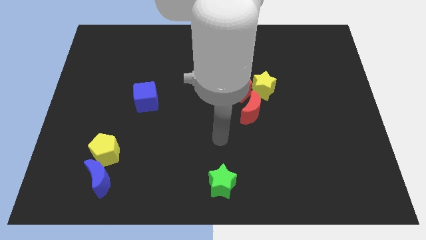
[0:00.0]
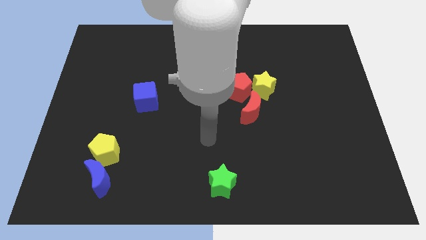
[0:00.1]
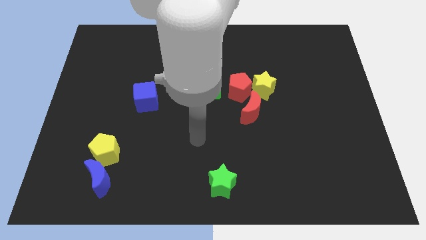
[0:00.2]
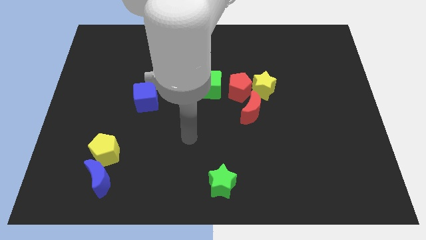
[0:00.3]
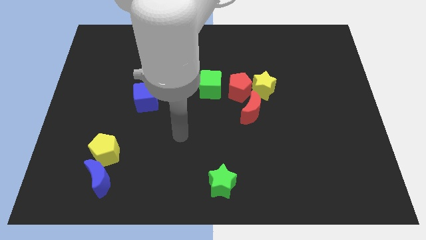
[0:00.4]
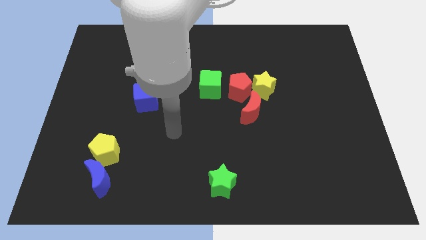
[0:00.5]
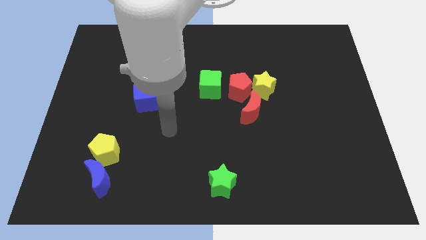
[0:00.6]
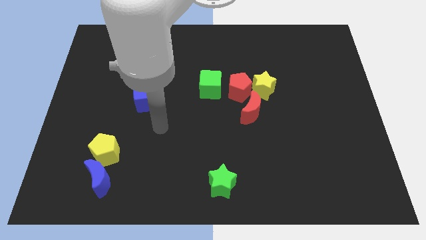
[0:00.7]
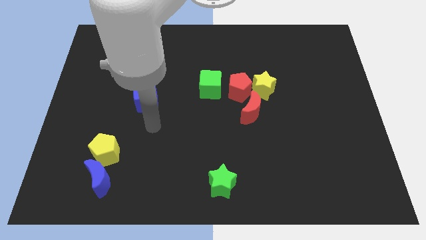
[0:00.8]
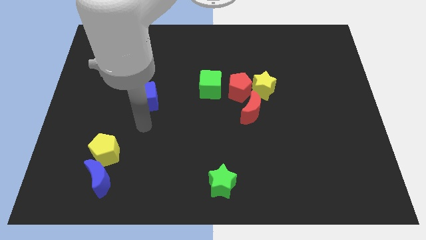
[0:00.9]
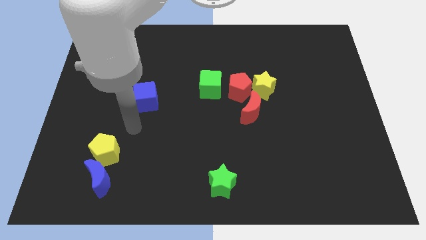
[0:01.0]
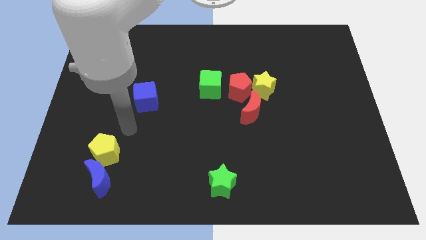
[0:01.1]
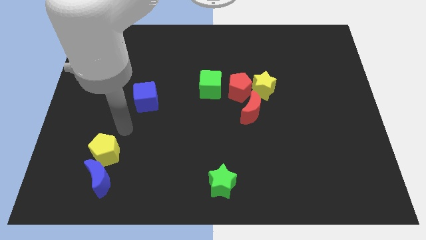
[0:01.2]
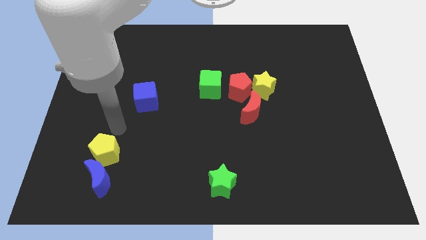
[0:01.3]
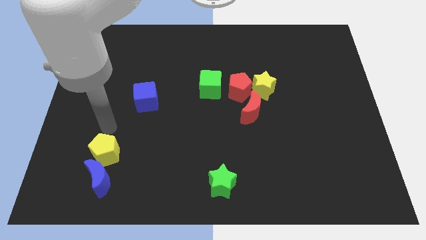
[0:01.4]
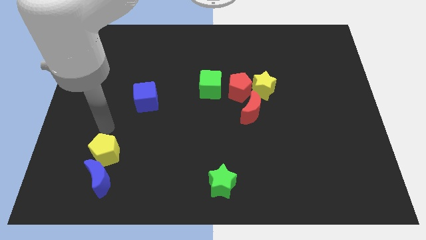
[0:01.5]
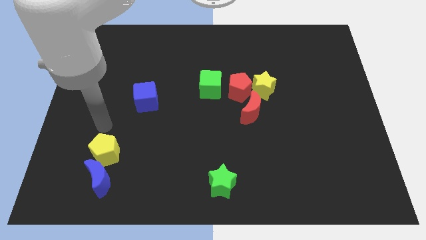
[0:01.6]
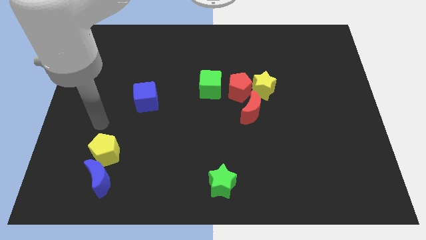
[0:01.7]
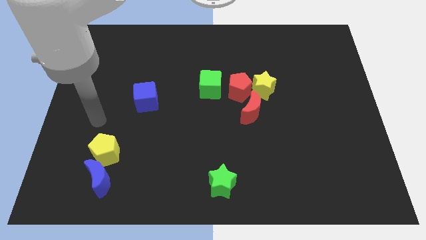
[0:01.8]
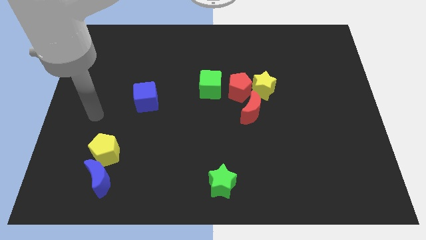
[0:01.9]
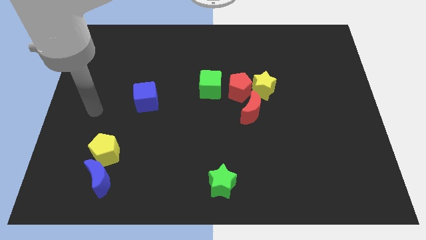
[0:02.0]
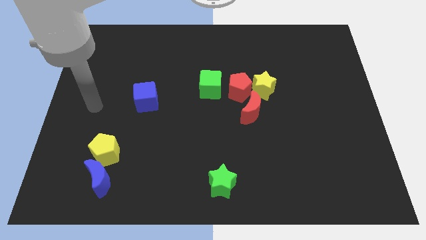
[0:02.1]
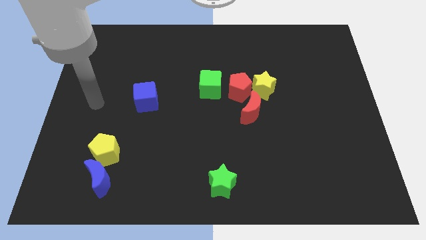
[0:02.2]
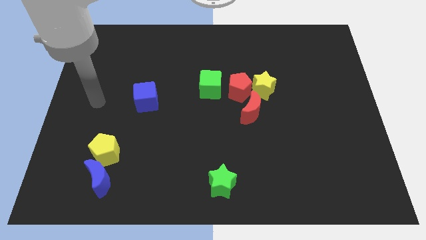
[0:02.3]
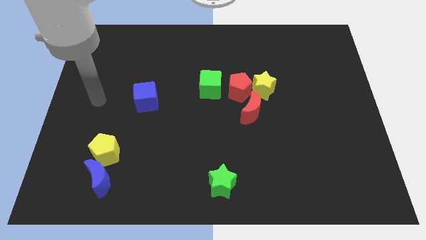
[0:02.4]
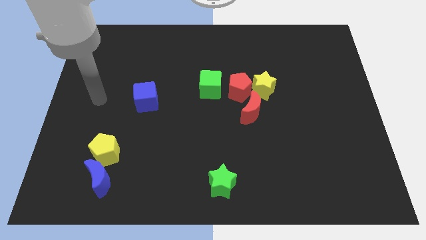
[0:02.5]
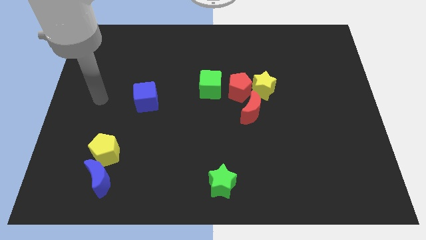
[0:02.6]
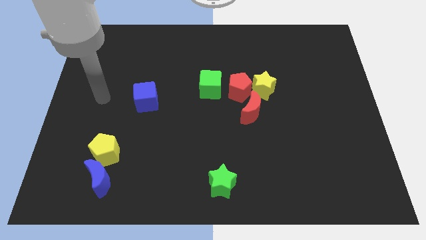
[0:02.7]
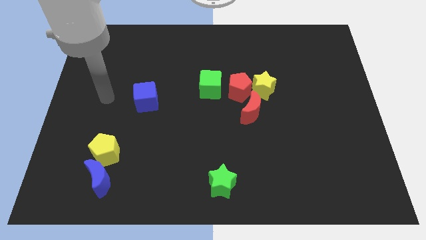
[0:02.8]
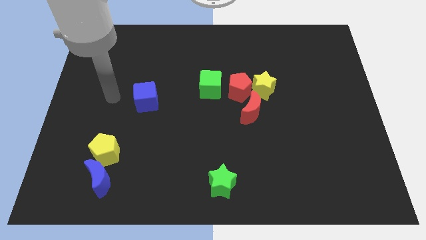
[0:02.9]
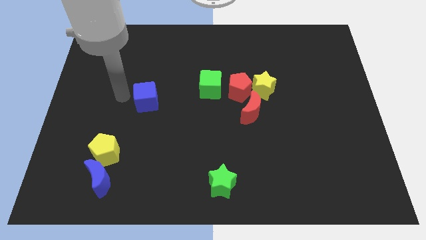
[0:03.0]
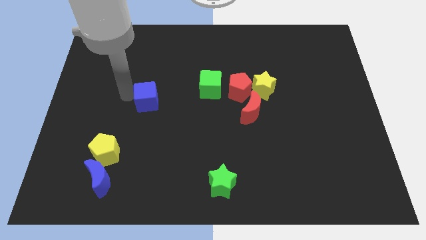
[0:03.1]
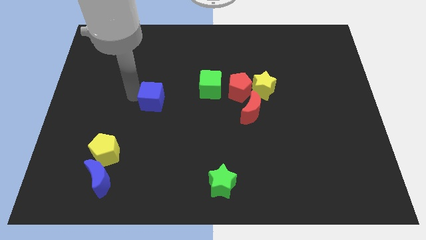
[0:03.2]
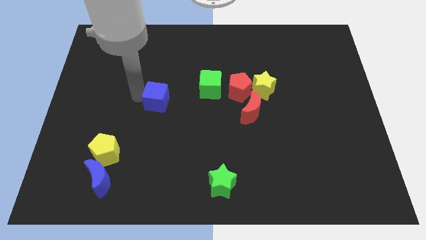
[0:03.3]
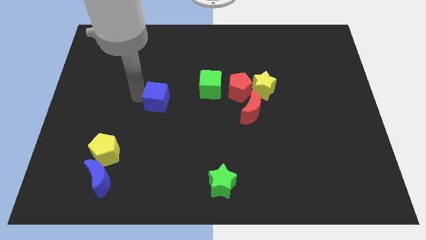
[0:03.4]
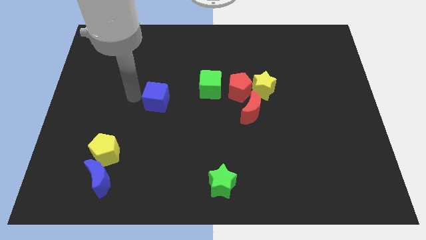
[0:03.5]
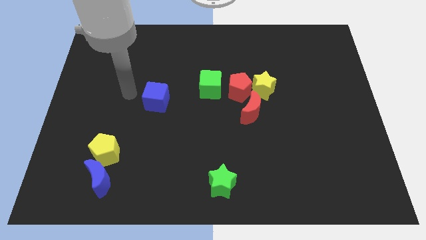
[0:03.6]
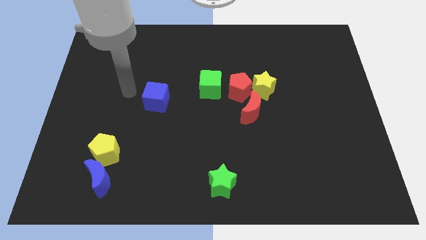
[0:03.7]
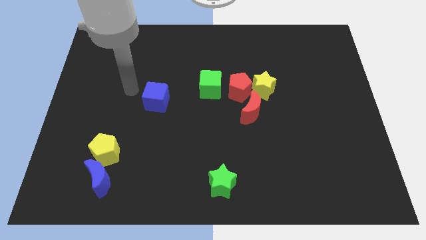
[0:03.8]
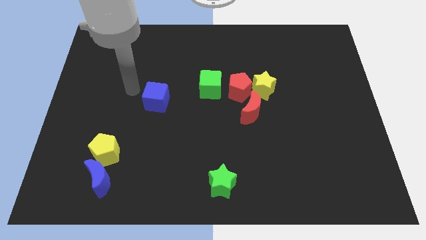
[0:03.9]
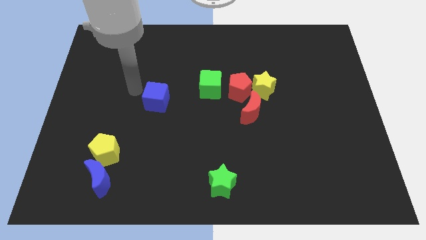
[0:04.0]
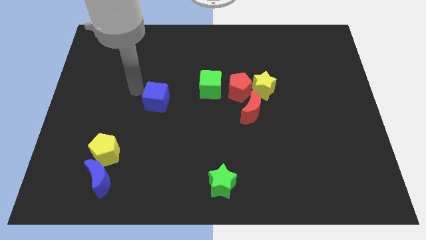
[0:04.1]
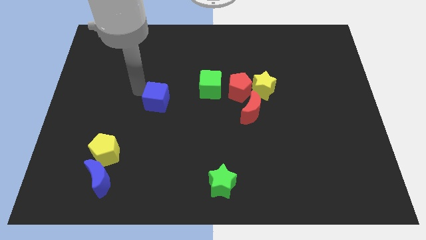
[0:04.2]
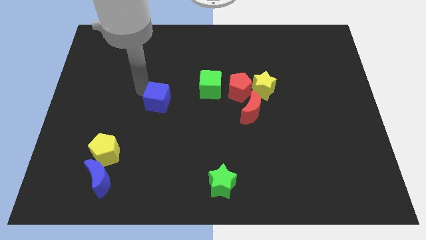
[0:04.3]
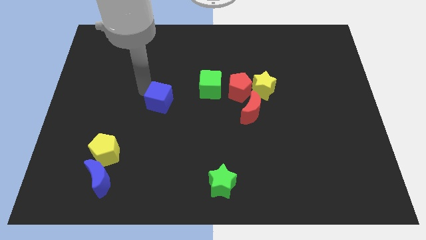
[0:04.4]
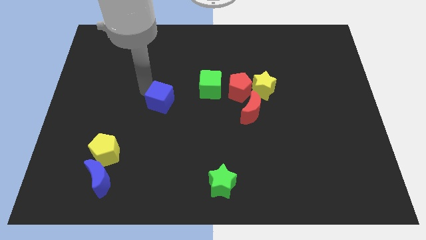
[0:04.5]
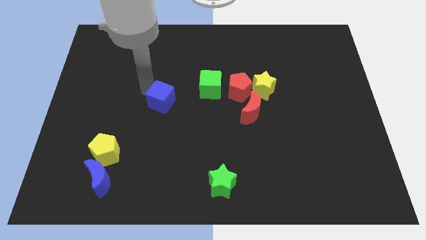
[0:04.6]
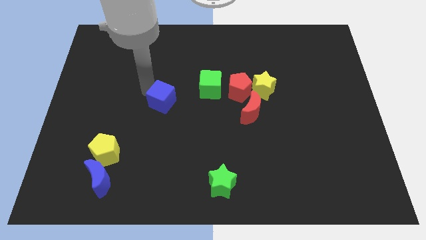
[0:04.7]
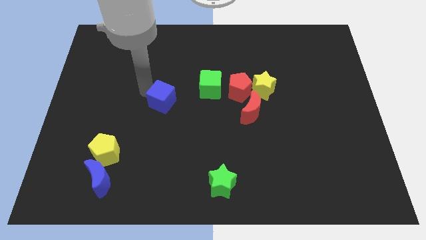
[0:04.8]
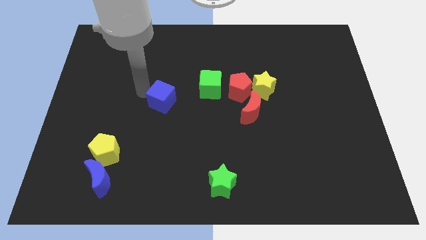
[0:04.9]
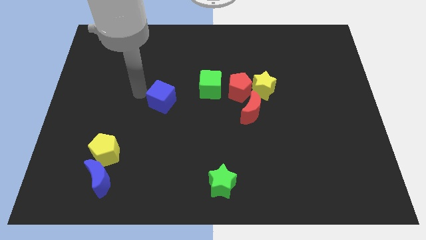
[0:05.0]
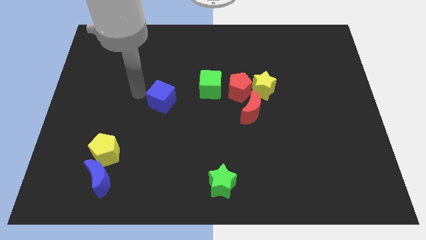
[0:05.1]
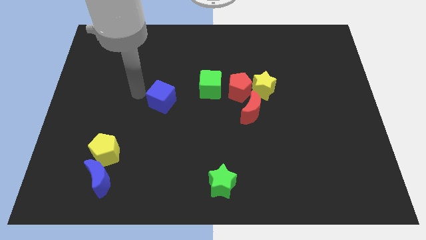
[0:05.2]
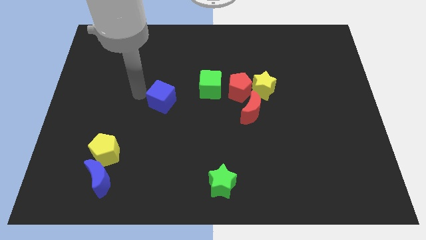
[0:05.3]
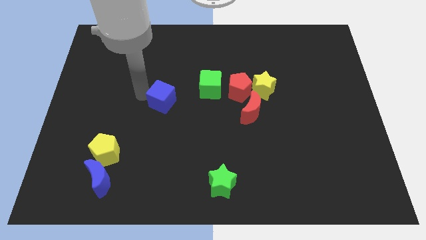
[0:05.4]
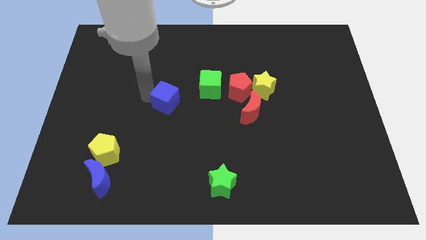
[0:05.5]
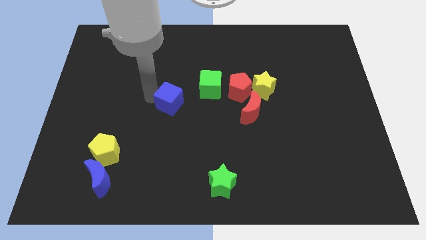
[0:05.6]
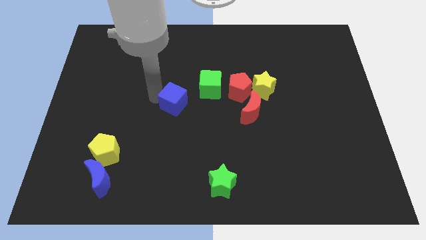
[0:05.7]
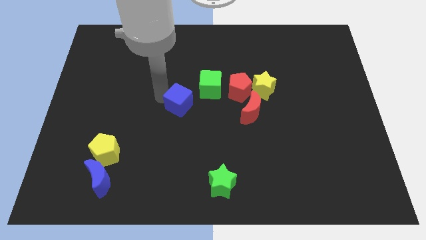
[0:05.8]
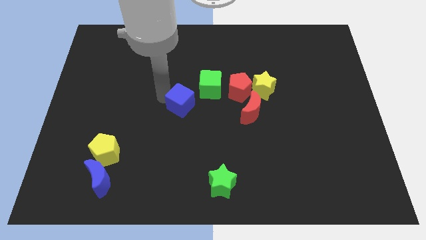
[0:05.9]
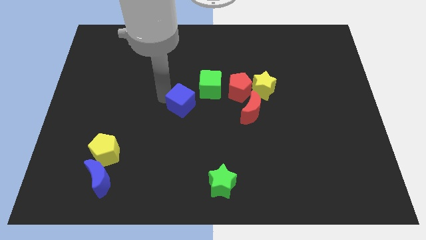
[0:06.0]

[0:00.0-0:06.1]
move the blue cube to the center of the board

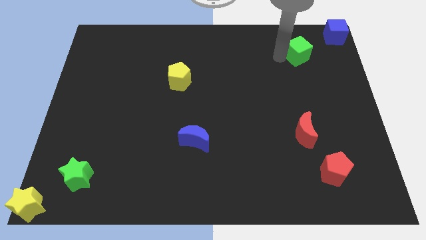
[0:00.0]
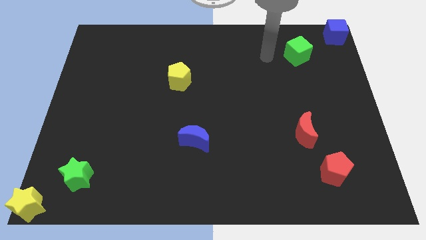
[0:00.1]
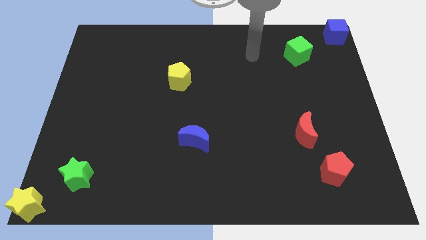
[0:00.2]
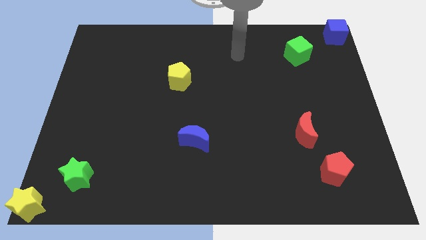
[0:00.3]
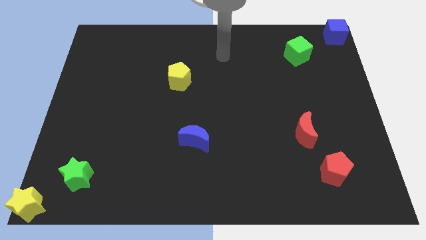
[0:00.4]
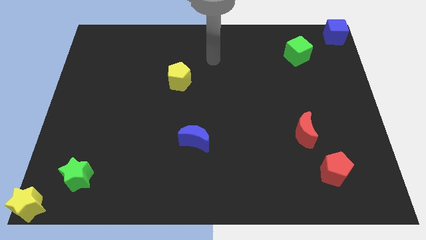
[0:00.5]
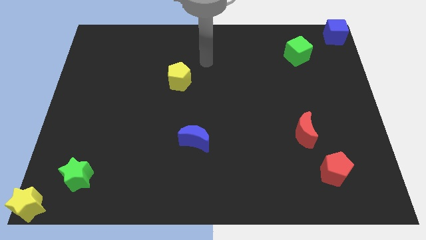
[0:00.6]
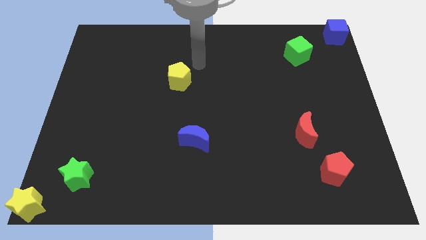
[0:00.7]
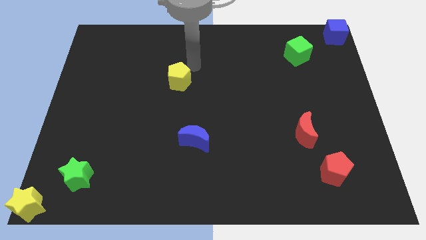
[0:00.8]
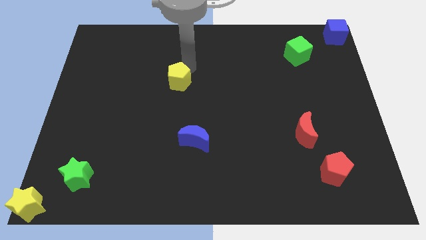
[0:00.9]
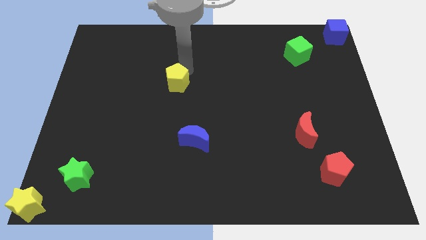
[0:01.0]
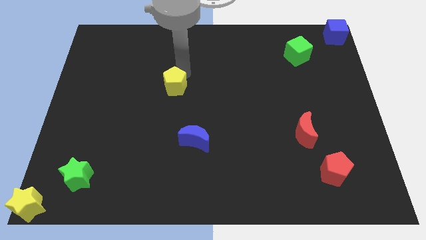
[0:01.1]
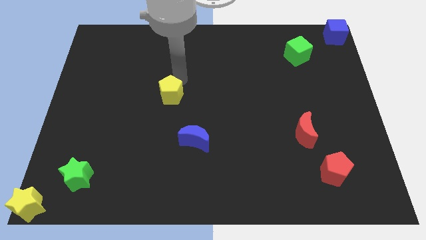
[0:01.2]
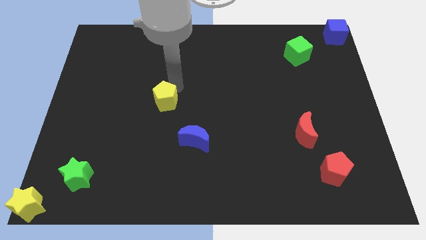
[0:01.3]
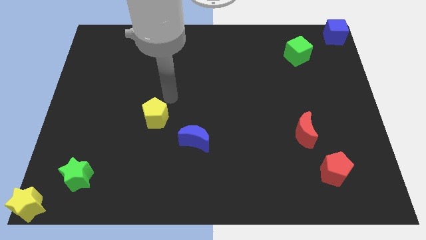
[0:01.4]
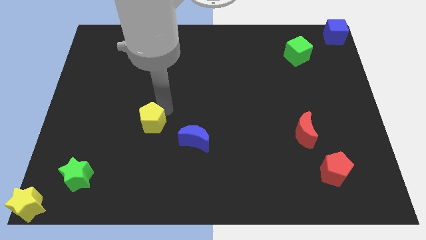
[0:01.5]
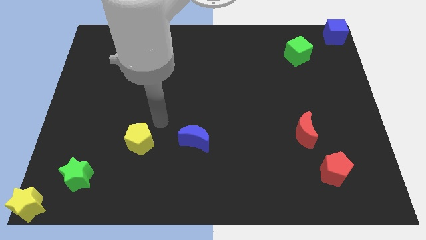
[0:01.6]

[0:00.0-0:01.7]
push the yellow pentagon parallel left to the blue cube

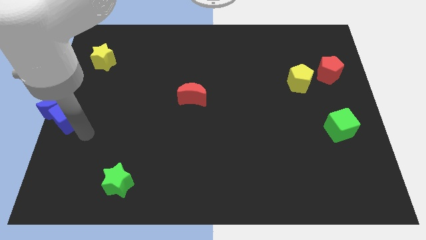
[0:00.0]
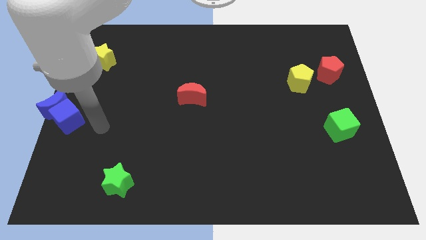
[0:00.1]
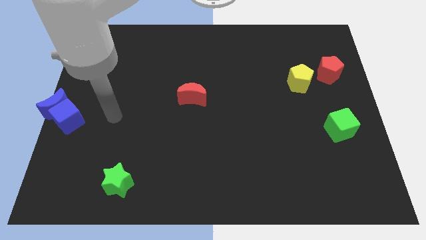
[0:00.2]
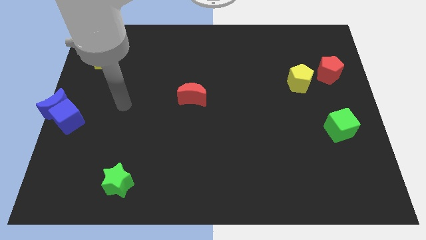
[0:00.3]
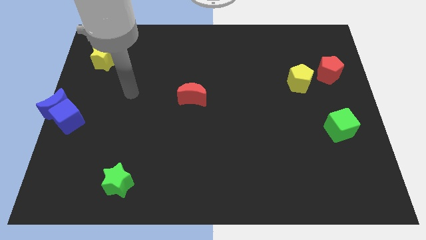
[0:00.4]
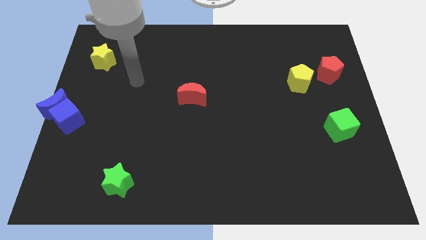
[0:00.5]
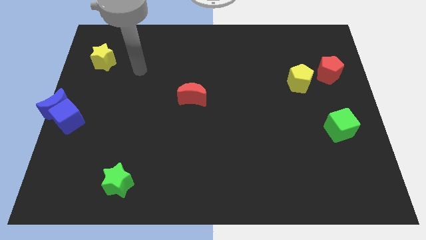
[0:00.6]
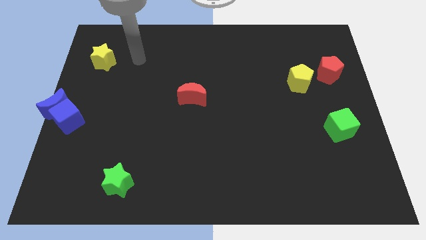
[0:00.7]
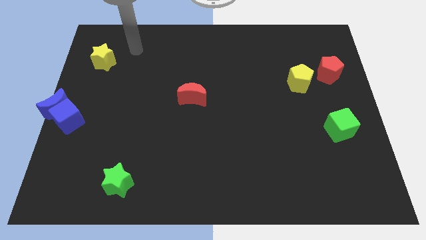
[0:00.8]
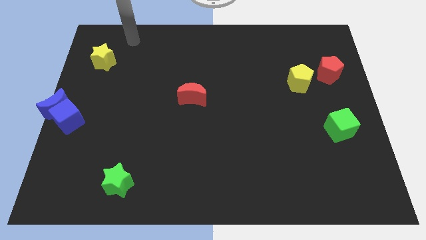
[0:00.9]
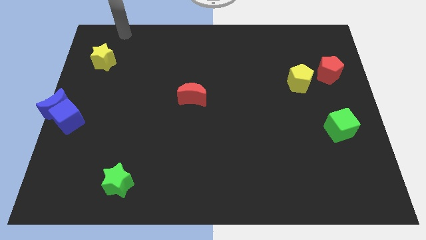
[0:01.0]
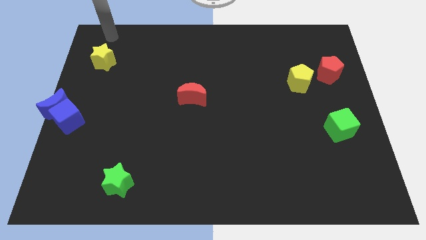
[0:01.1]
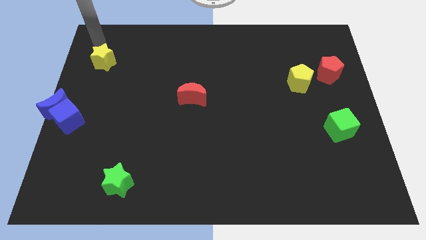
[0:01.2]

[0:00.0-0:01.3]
place your arm to the top of the yellow star
